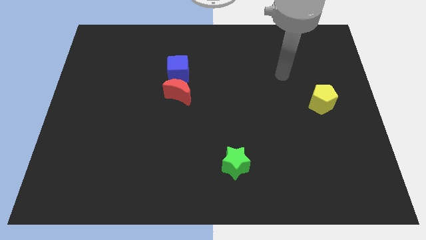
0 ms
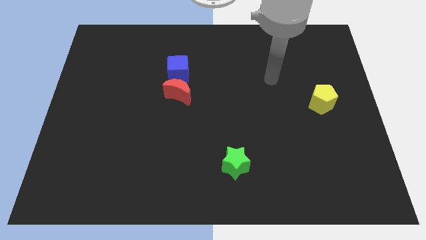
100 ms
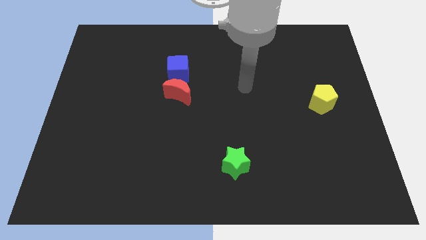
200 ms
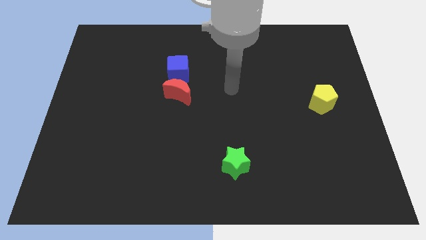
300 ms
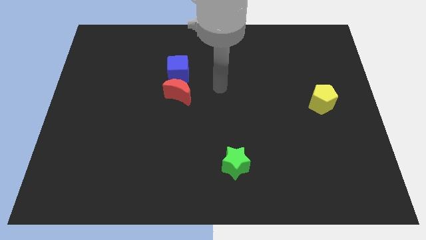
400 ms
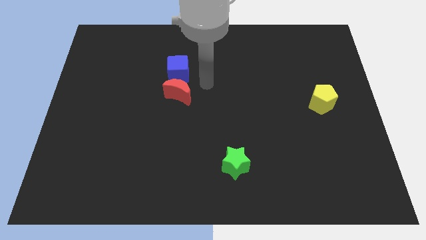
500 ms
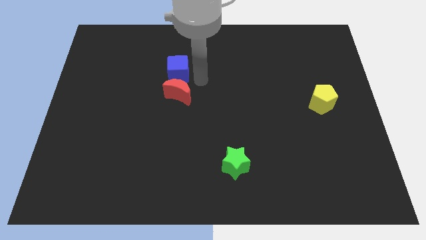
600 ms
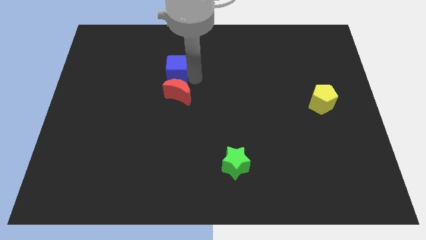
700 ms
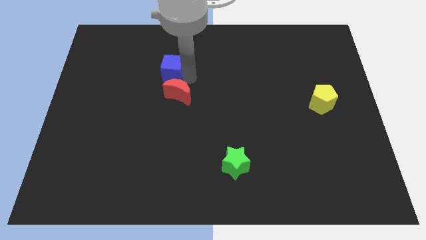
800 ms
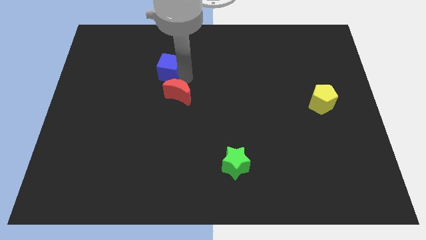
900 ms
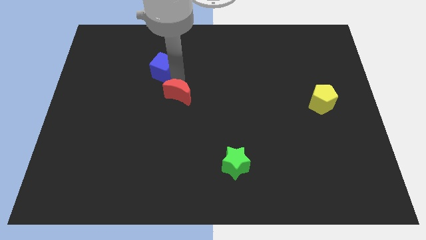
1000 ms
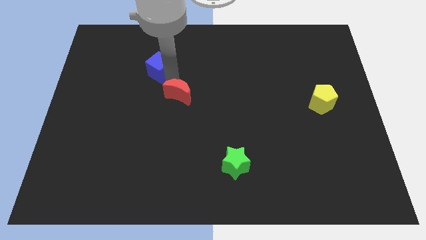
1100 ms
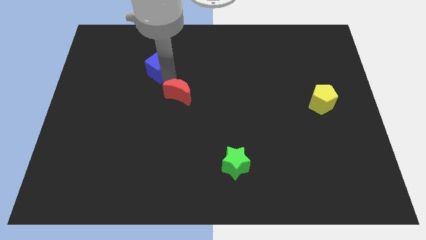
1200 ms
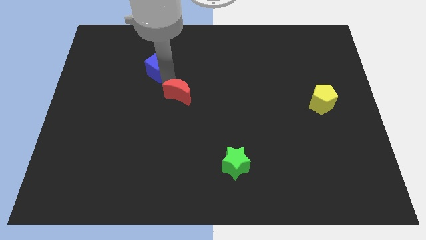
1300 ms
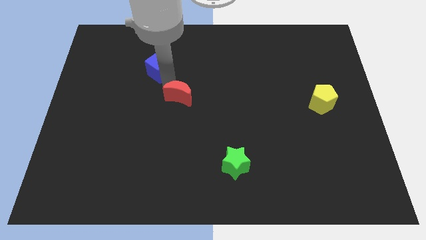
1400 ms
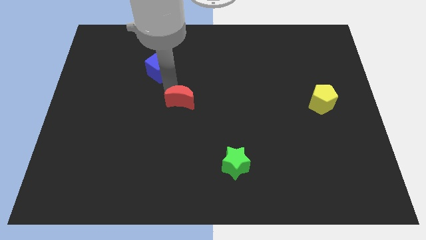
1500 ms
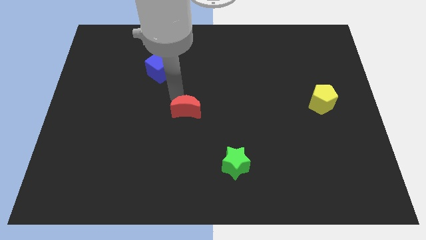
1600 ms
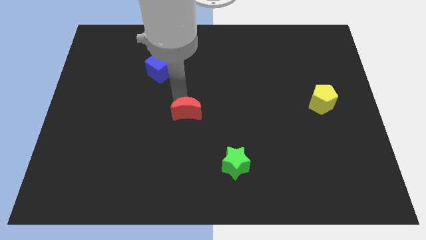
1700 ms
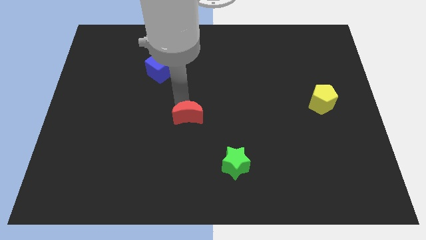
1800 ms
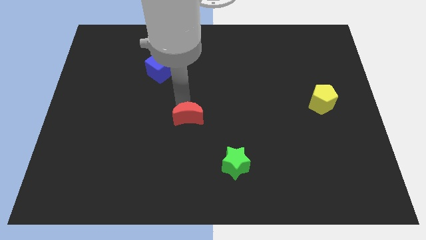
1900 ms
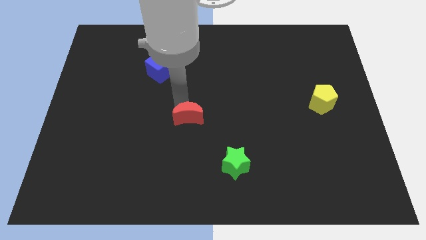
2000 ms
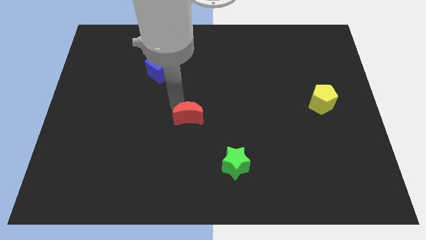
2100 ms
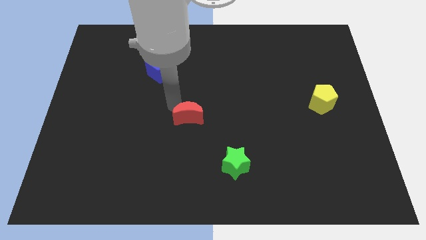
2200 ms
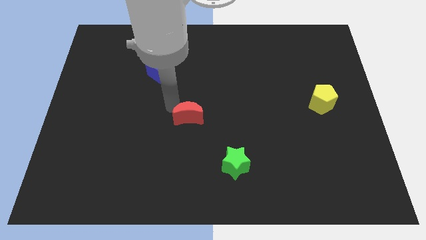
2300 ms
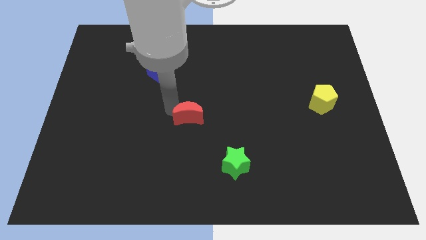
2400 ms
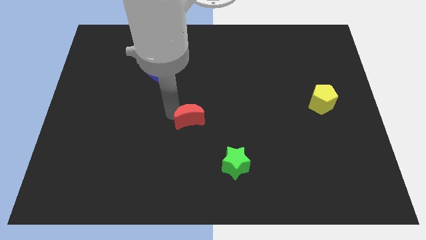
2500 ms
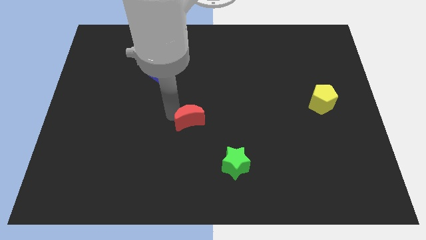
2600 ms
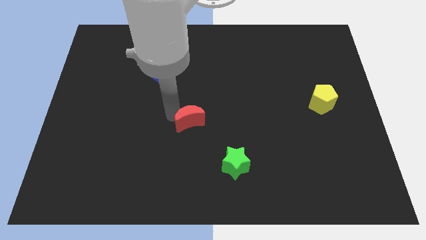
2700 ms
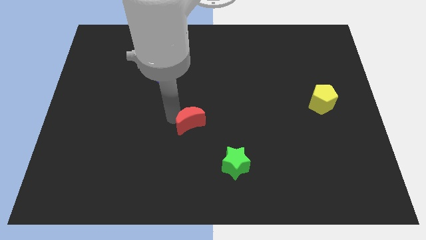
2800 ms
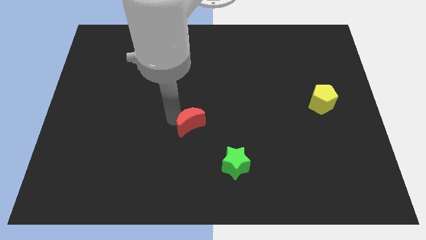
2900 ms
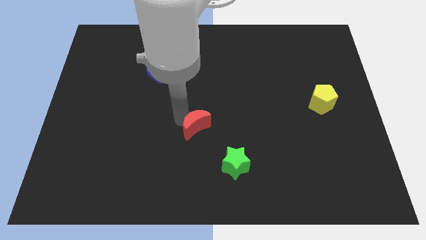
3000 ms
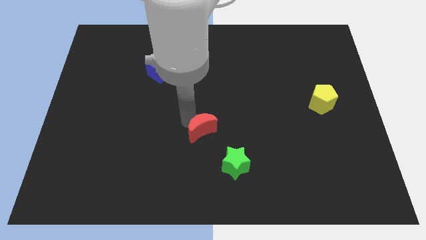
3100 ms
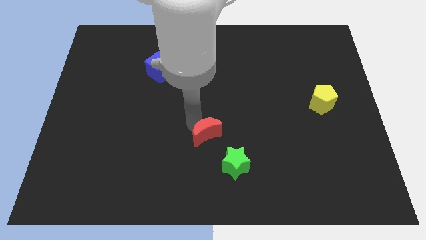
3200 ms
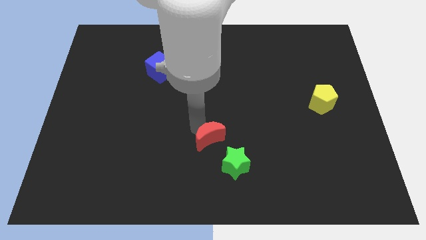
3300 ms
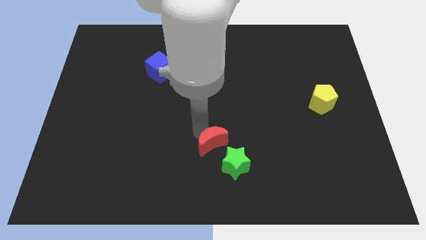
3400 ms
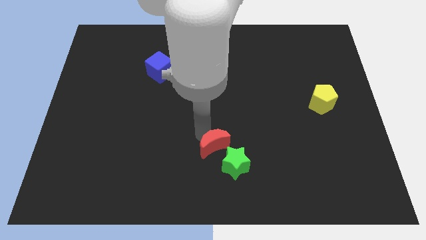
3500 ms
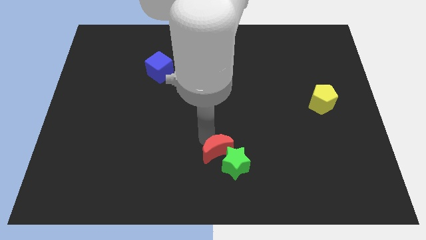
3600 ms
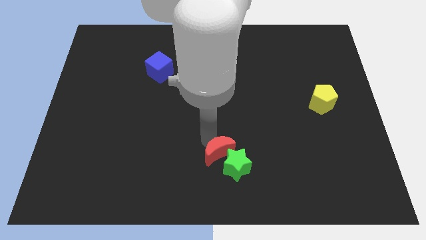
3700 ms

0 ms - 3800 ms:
put the moon close to the star

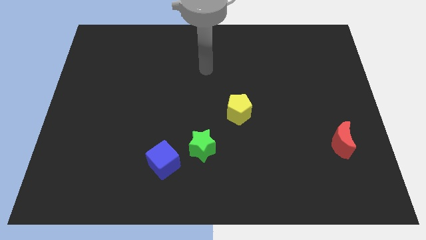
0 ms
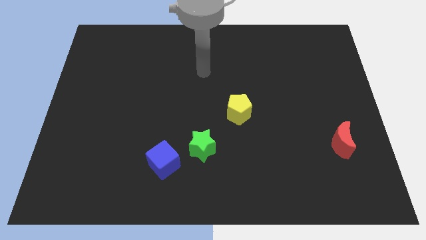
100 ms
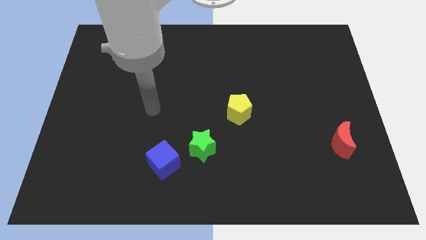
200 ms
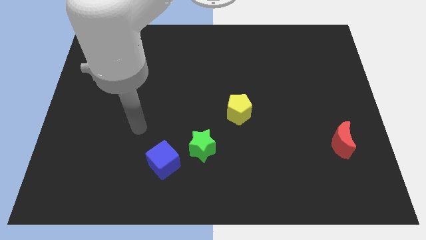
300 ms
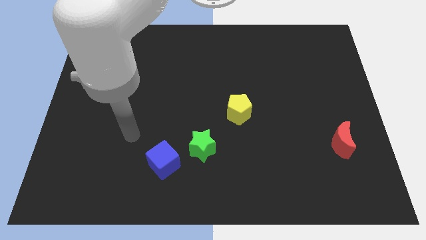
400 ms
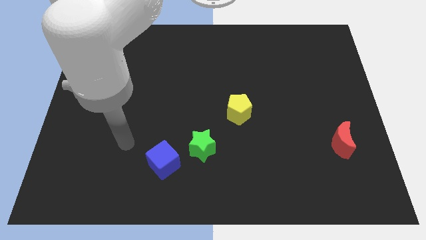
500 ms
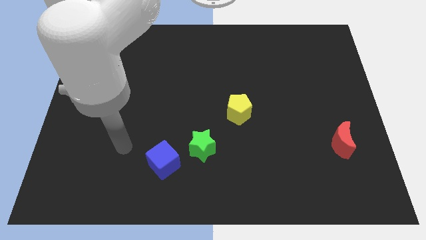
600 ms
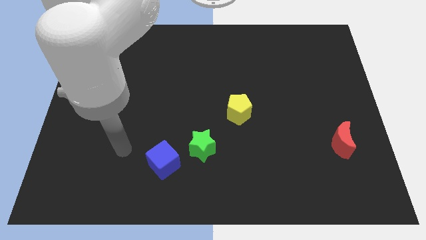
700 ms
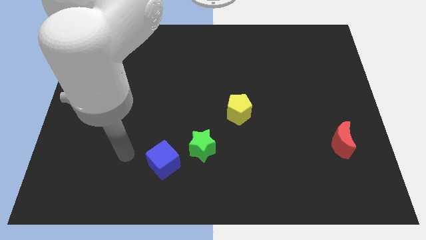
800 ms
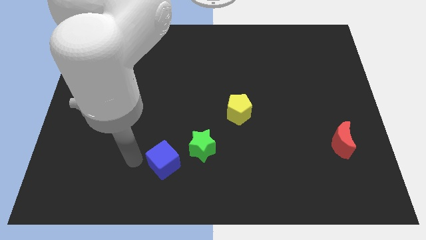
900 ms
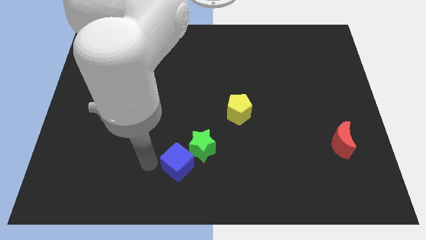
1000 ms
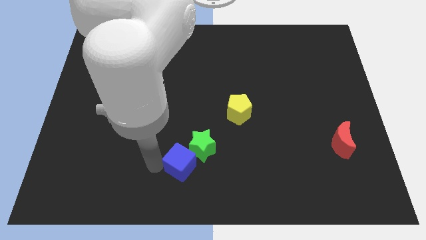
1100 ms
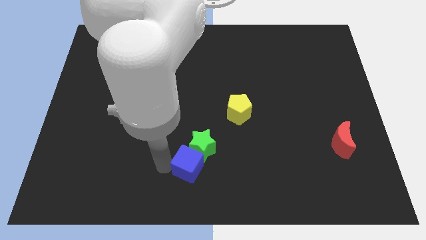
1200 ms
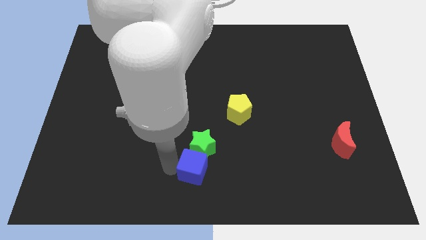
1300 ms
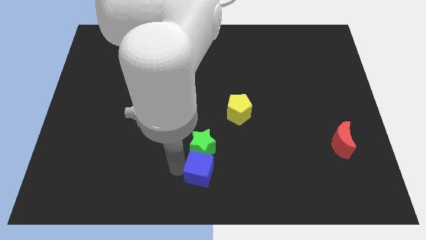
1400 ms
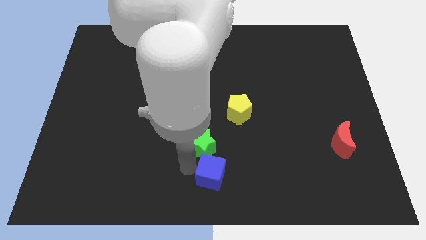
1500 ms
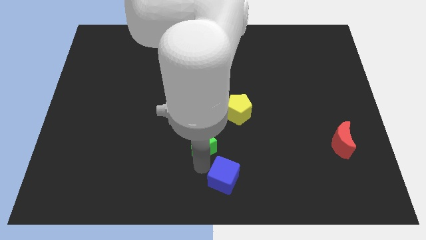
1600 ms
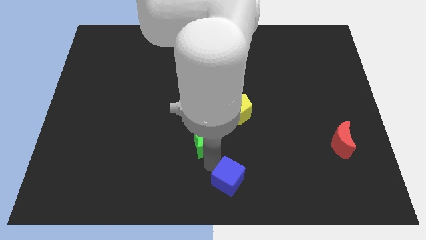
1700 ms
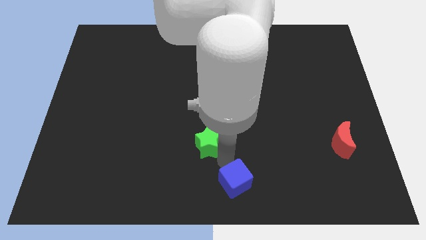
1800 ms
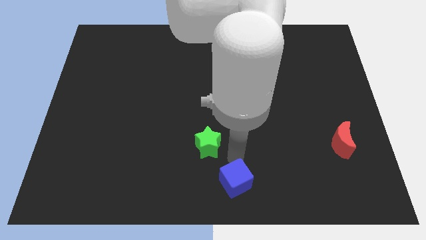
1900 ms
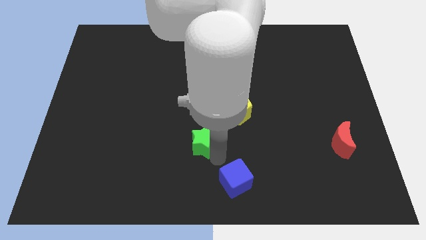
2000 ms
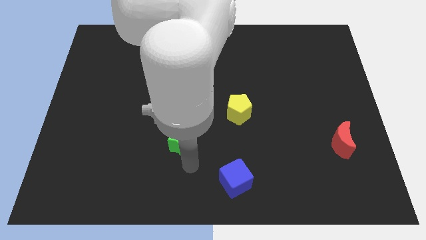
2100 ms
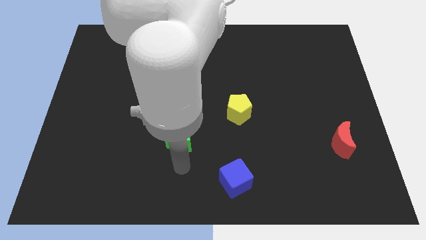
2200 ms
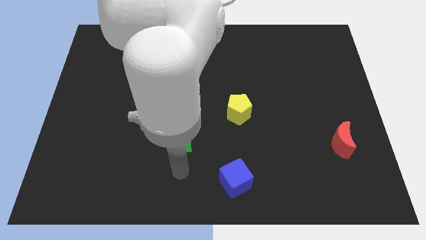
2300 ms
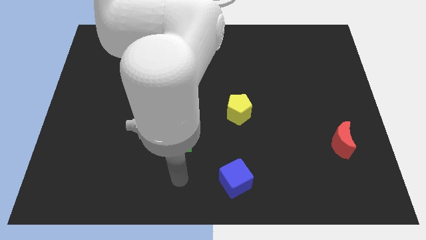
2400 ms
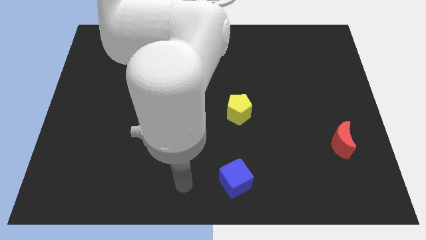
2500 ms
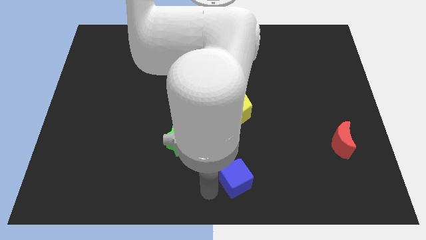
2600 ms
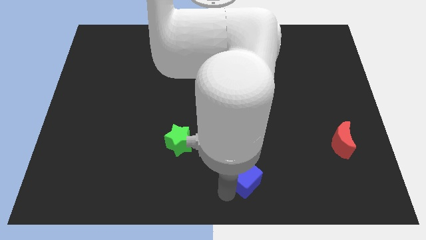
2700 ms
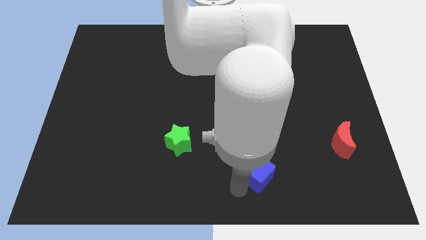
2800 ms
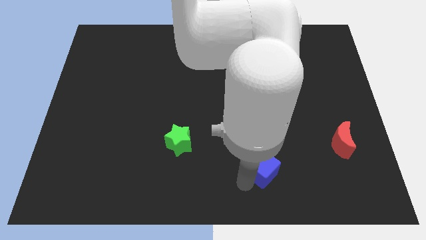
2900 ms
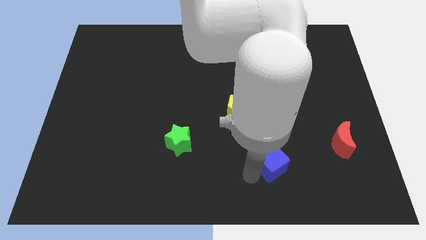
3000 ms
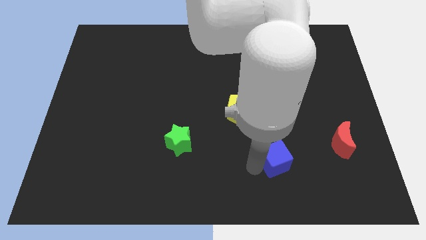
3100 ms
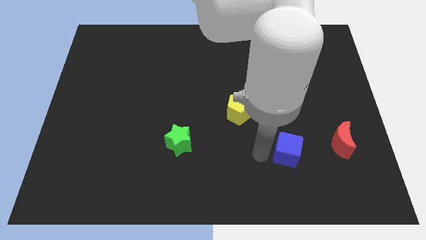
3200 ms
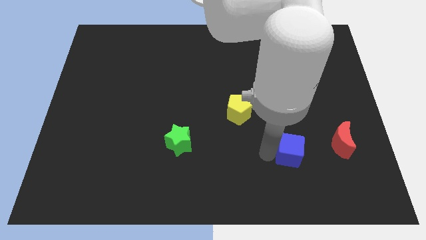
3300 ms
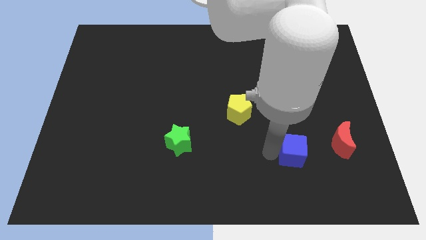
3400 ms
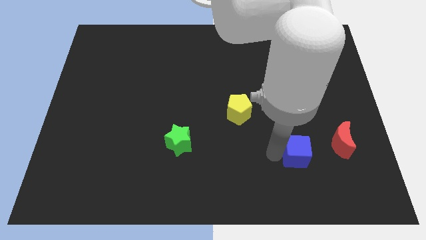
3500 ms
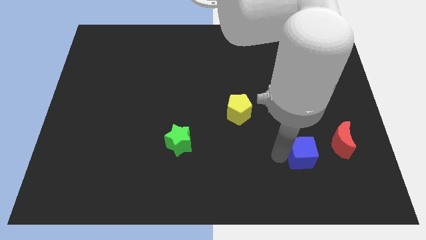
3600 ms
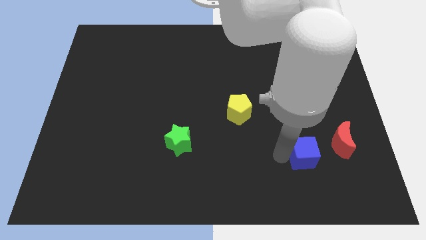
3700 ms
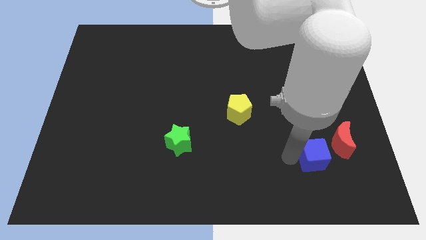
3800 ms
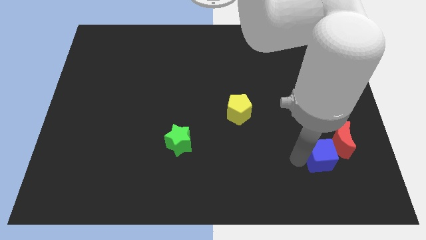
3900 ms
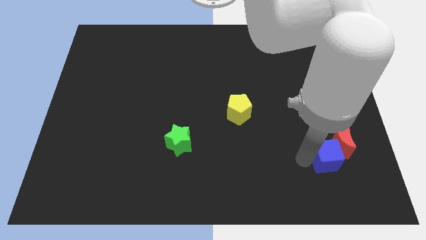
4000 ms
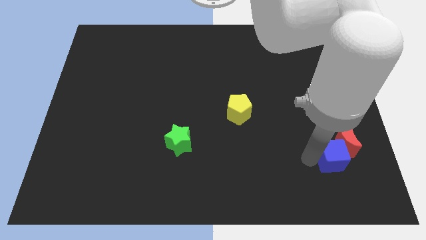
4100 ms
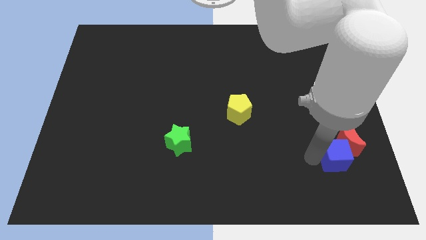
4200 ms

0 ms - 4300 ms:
push the blue block to the red block

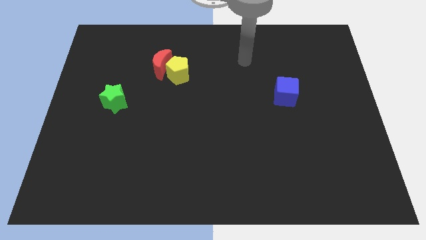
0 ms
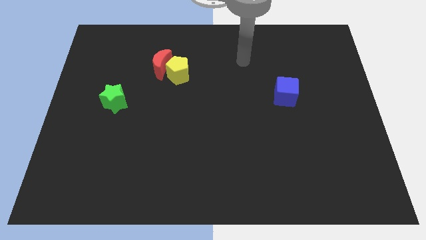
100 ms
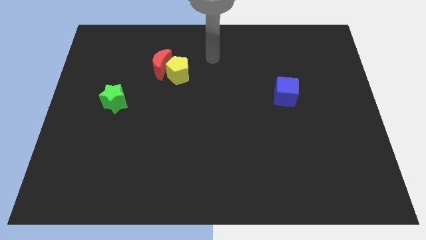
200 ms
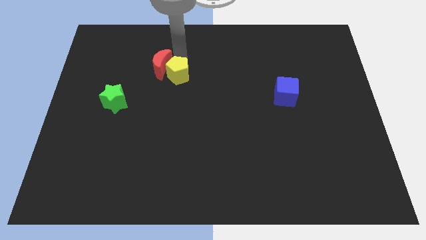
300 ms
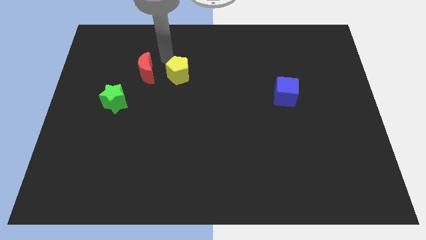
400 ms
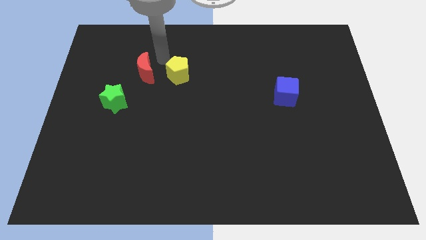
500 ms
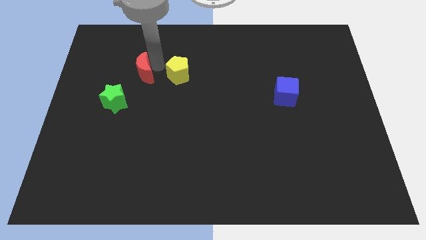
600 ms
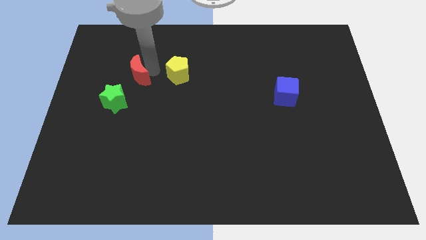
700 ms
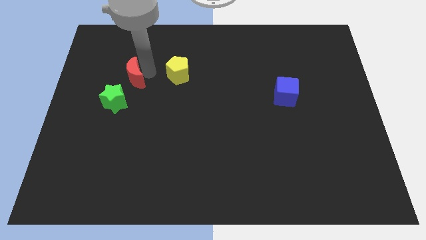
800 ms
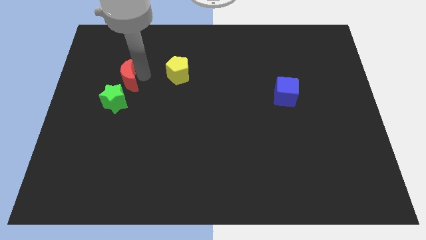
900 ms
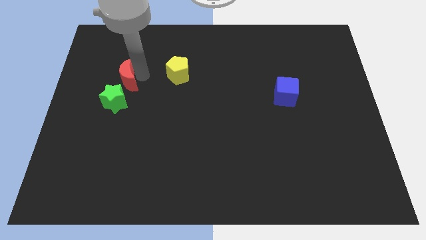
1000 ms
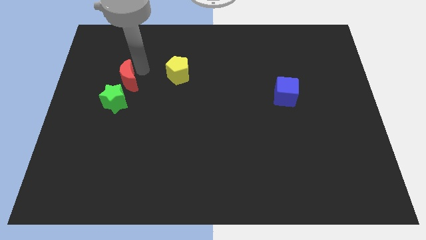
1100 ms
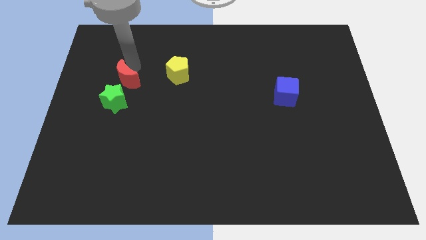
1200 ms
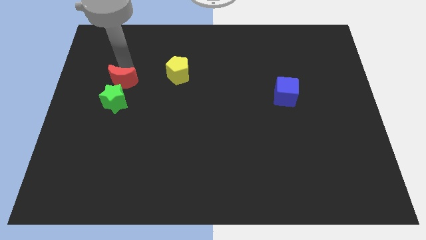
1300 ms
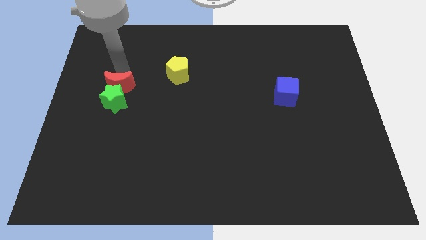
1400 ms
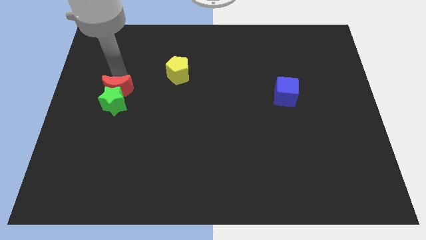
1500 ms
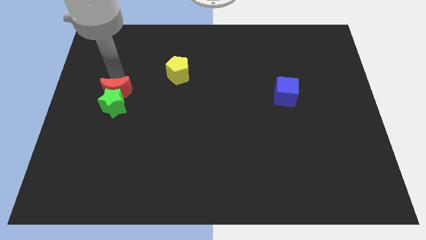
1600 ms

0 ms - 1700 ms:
slide the red moon next to the star
